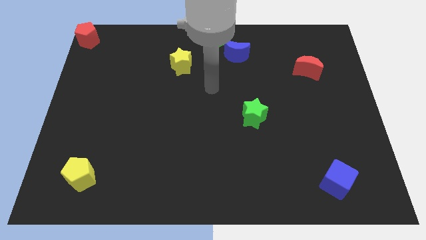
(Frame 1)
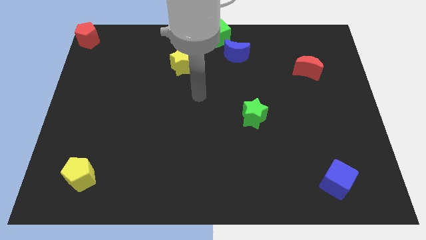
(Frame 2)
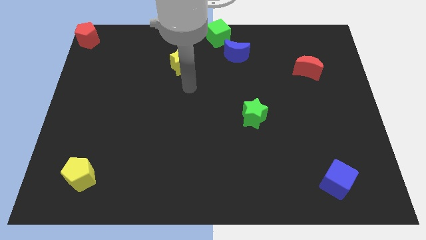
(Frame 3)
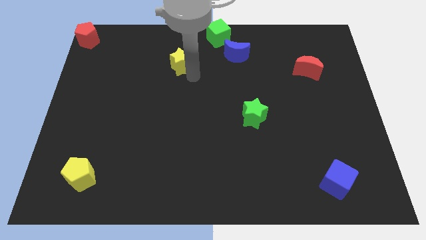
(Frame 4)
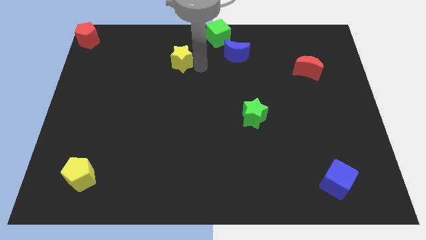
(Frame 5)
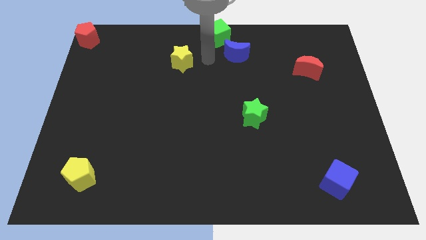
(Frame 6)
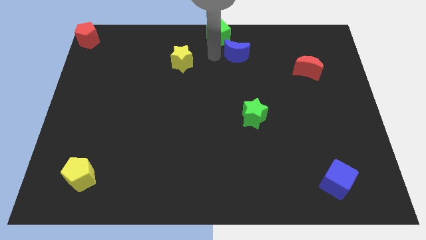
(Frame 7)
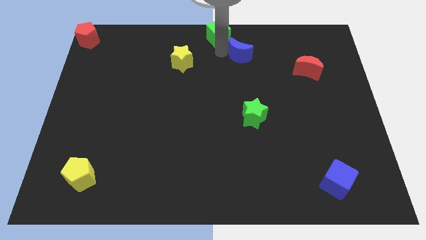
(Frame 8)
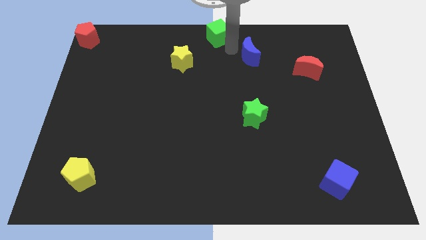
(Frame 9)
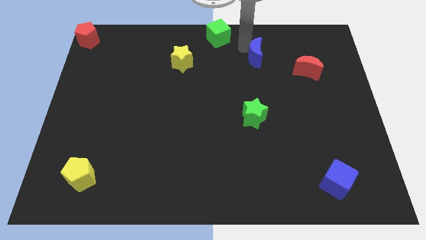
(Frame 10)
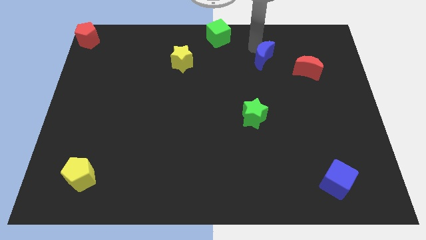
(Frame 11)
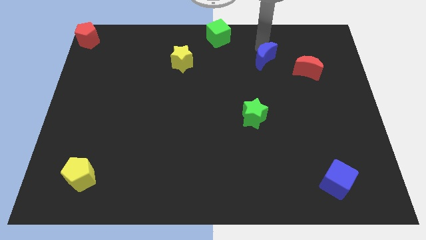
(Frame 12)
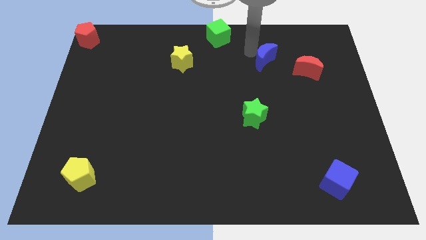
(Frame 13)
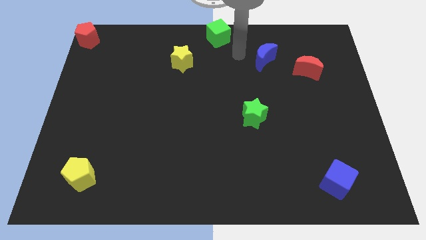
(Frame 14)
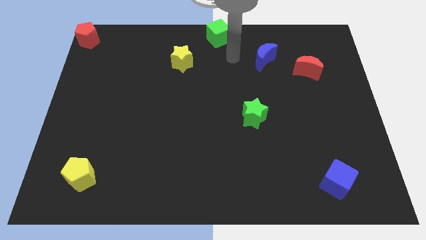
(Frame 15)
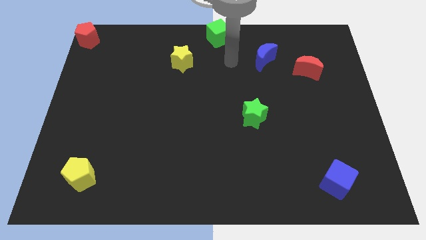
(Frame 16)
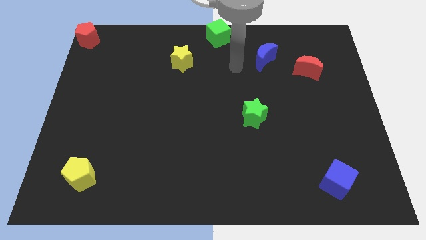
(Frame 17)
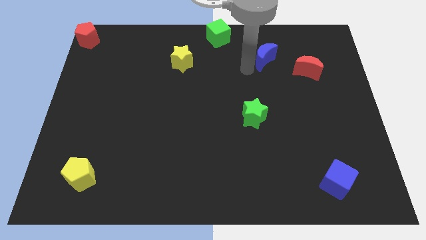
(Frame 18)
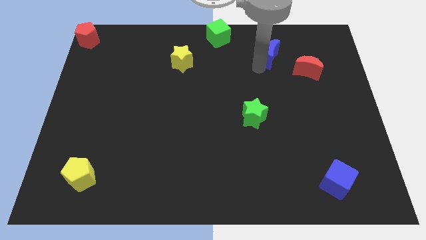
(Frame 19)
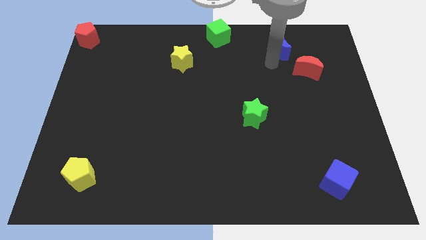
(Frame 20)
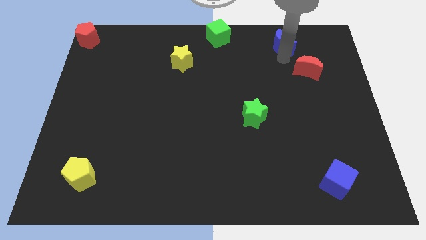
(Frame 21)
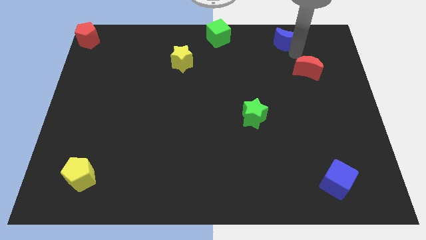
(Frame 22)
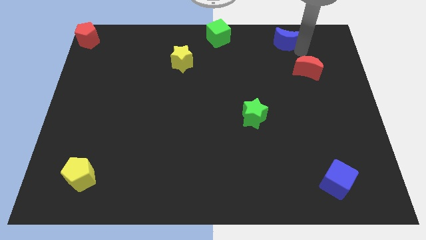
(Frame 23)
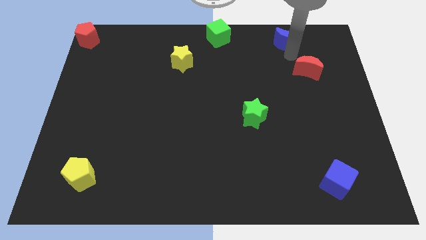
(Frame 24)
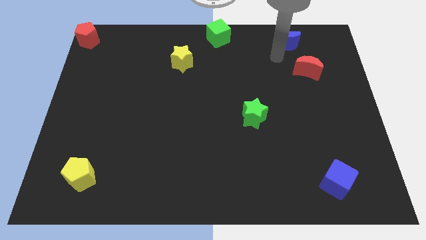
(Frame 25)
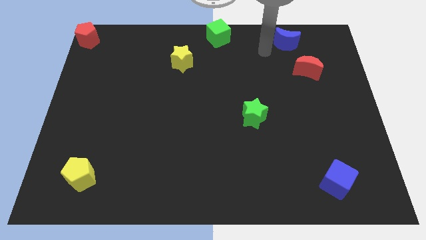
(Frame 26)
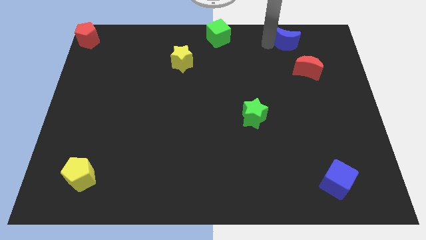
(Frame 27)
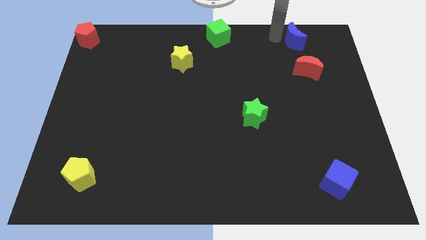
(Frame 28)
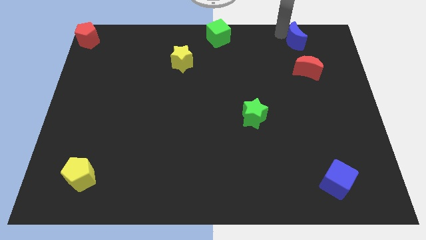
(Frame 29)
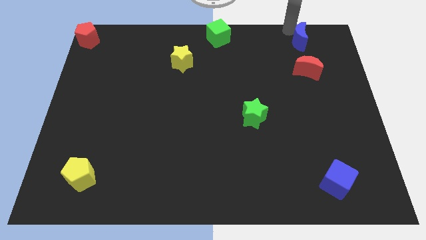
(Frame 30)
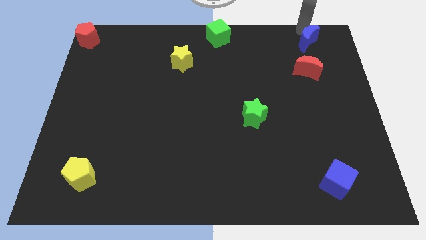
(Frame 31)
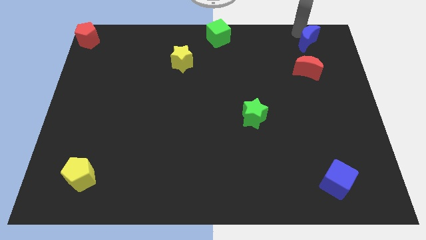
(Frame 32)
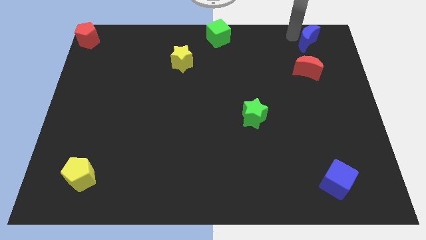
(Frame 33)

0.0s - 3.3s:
put the blue crescent at the top side of the blue crescent

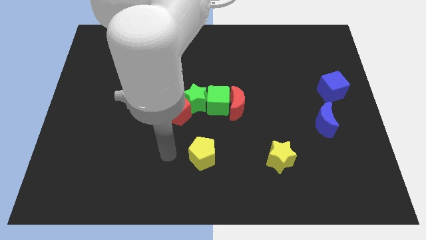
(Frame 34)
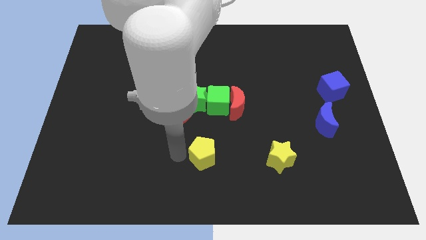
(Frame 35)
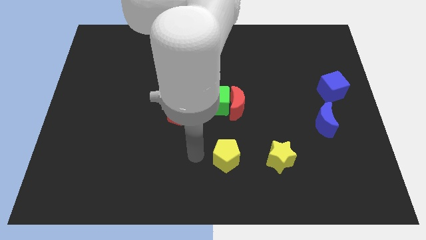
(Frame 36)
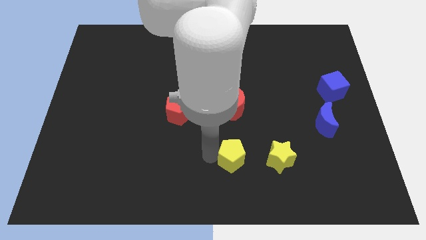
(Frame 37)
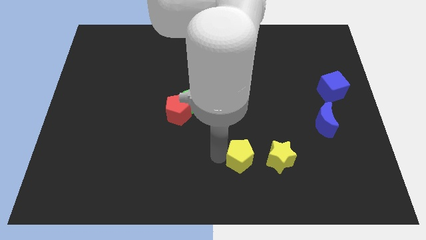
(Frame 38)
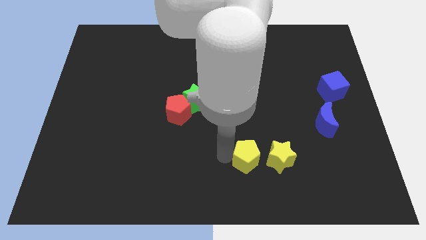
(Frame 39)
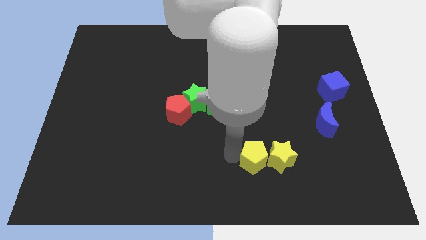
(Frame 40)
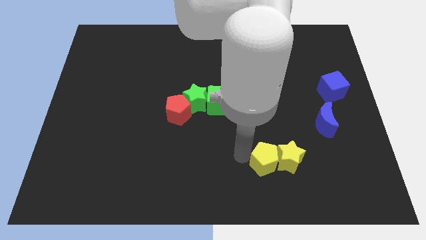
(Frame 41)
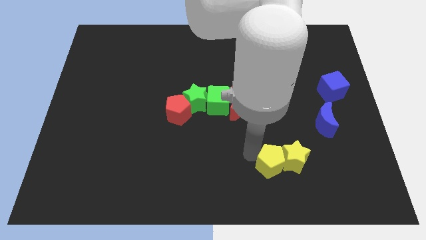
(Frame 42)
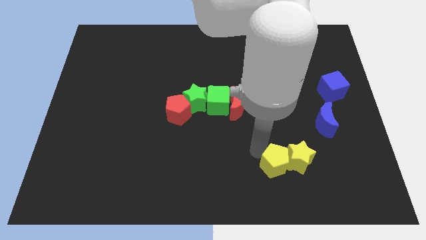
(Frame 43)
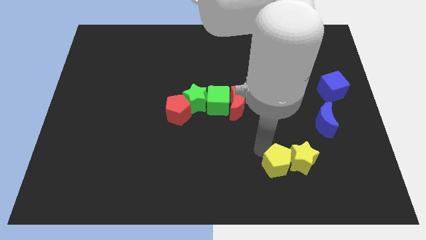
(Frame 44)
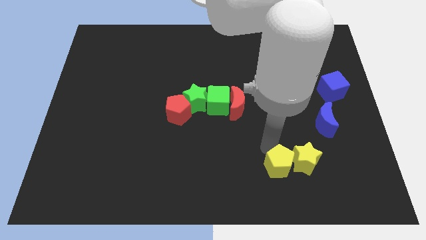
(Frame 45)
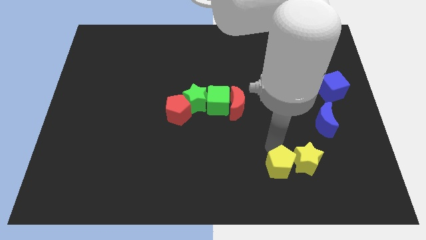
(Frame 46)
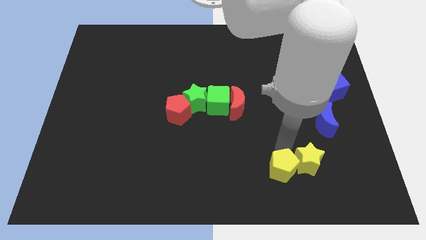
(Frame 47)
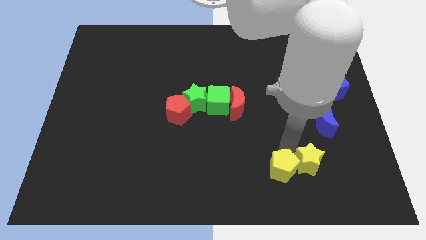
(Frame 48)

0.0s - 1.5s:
push the yellow pentagon to the left side of the yellow star

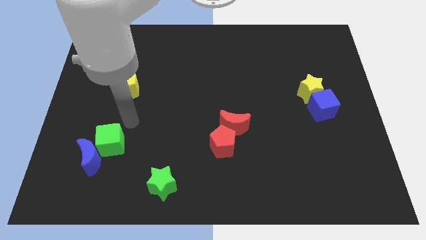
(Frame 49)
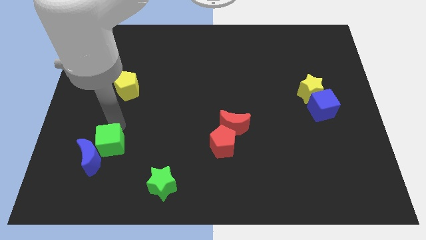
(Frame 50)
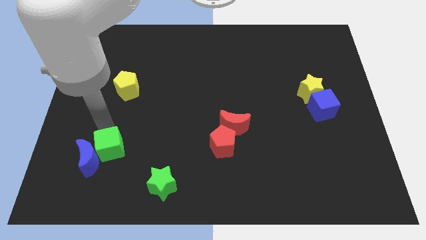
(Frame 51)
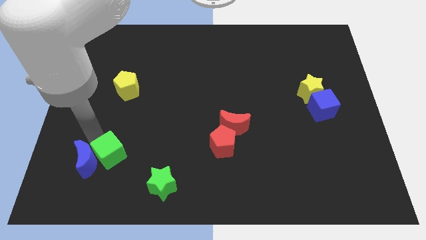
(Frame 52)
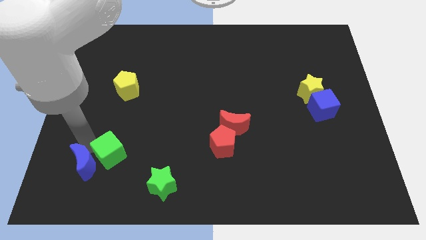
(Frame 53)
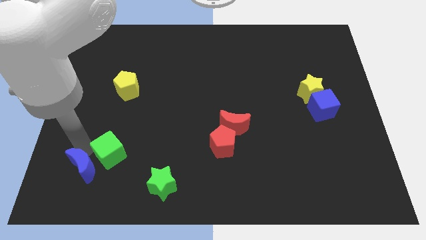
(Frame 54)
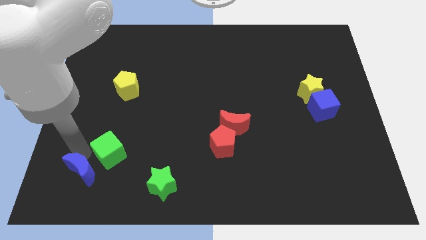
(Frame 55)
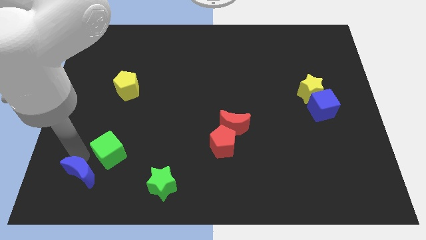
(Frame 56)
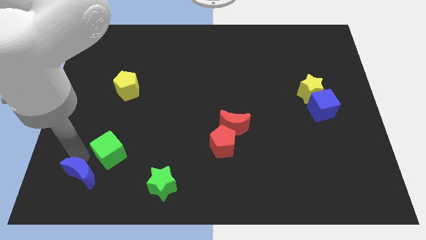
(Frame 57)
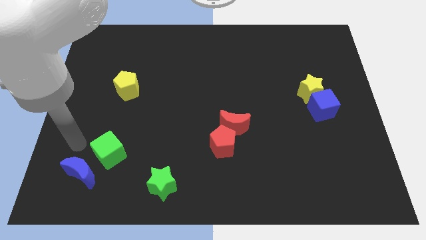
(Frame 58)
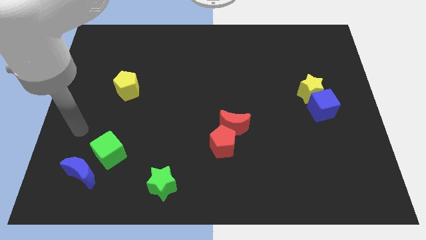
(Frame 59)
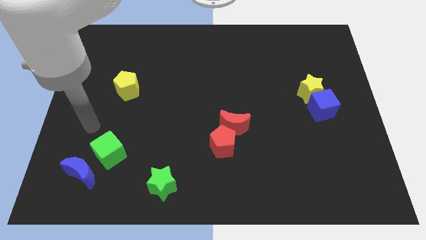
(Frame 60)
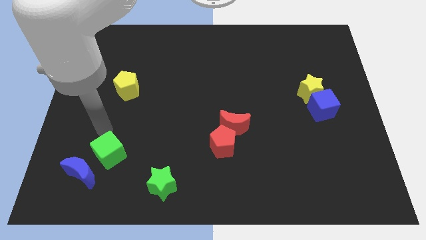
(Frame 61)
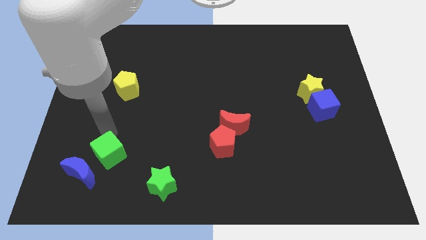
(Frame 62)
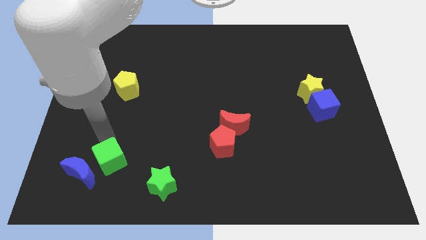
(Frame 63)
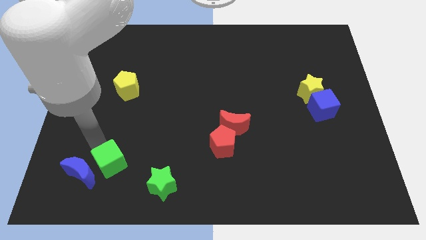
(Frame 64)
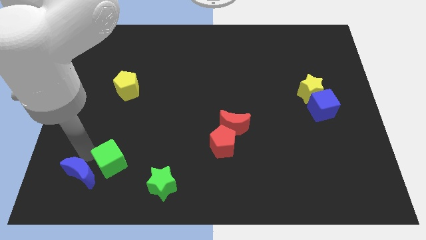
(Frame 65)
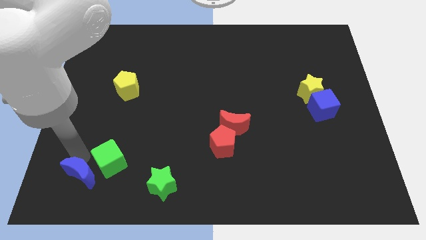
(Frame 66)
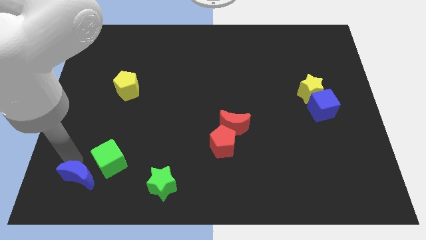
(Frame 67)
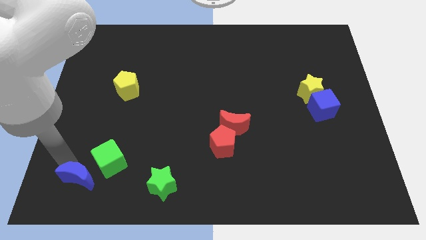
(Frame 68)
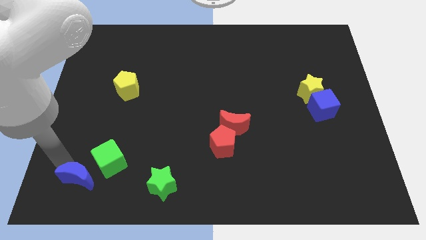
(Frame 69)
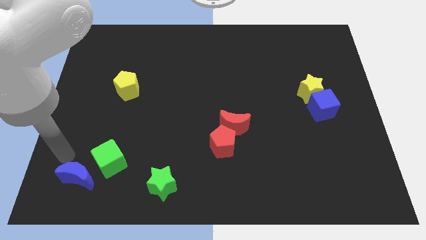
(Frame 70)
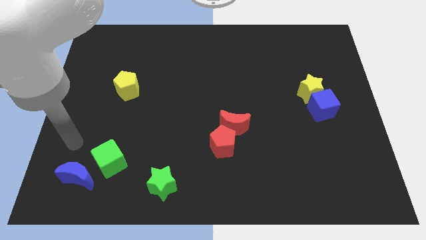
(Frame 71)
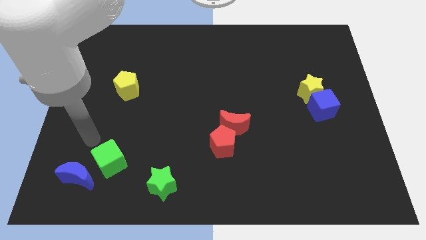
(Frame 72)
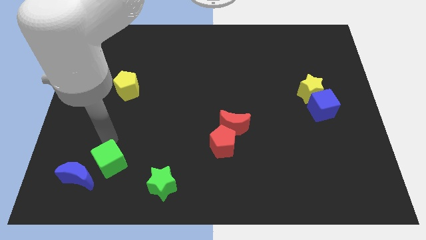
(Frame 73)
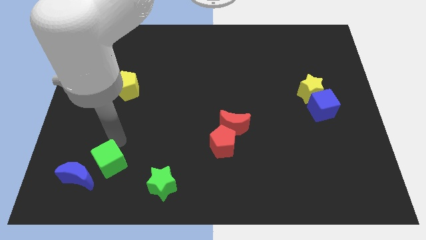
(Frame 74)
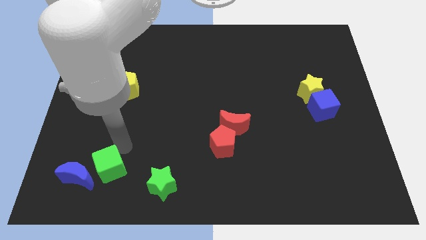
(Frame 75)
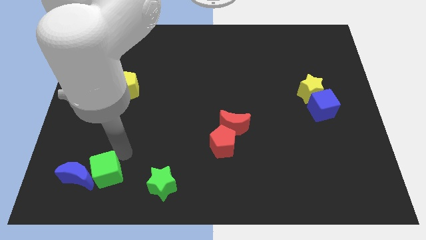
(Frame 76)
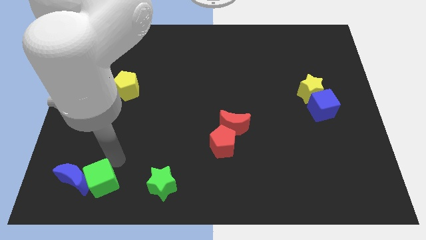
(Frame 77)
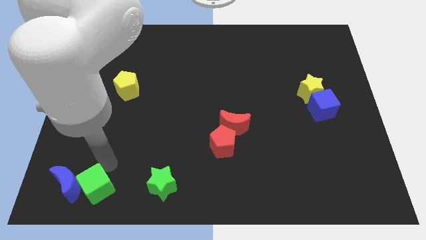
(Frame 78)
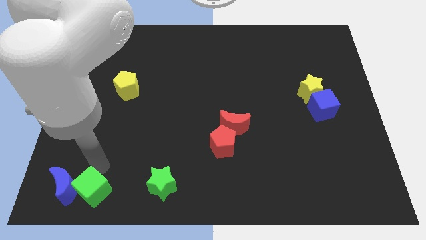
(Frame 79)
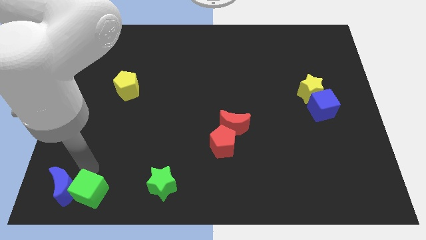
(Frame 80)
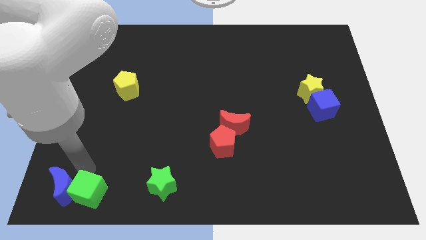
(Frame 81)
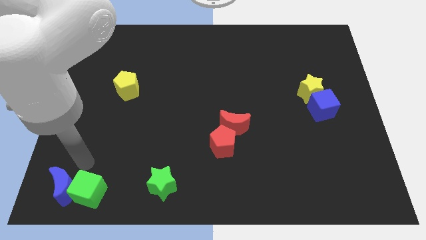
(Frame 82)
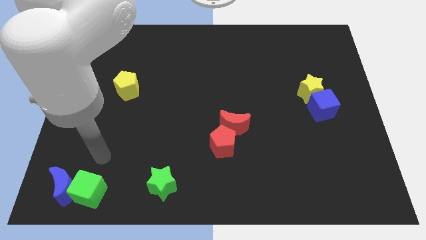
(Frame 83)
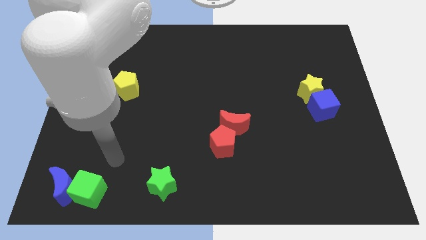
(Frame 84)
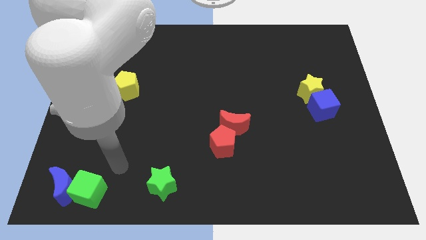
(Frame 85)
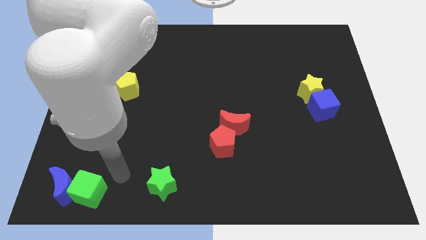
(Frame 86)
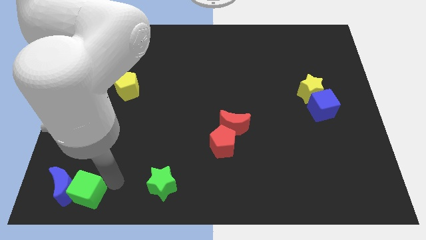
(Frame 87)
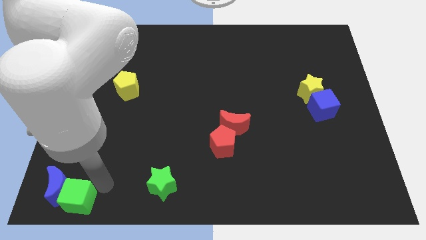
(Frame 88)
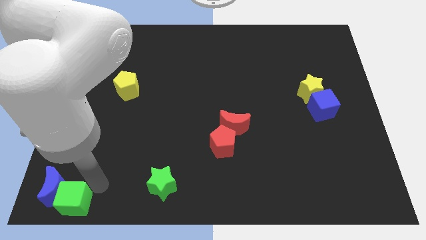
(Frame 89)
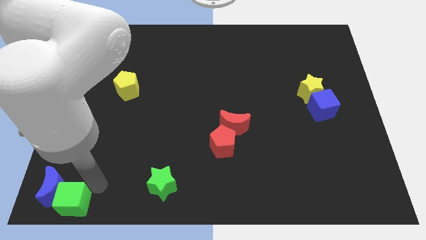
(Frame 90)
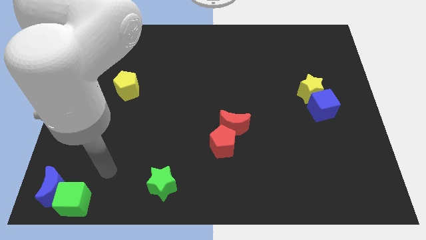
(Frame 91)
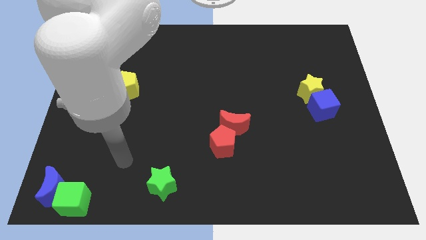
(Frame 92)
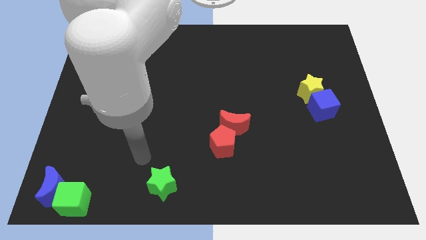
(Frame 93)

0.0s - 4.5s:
push the green cube along with the blue moon towards the bottom left side of the board
